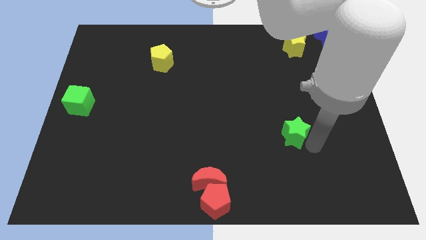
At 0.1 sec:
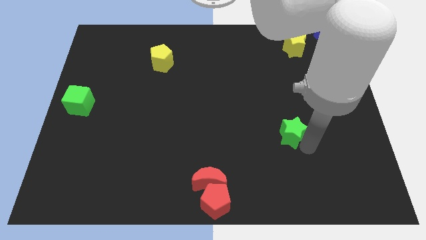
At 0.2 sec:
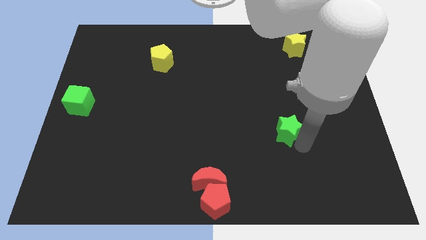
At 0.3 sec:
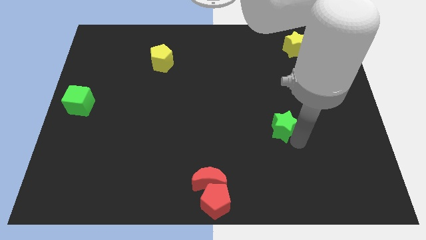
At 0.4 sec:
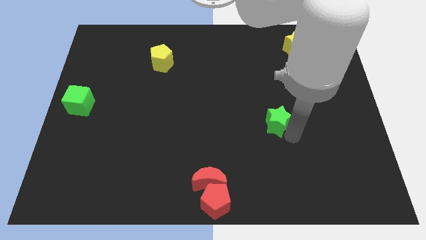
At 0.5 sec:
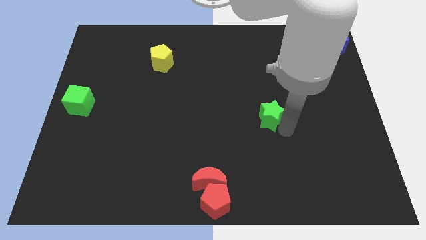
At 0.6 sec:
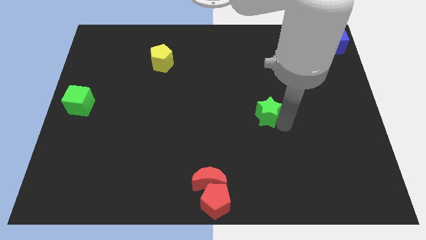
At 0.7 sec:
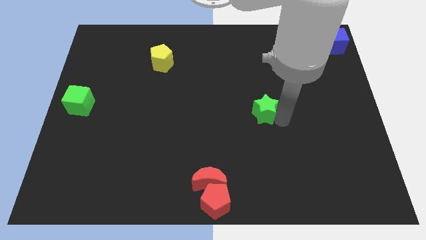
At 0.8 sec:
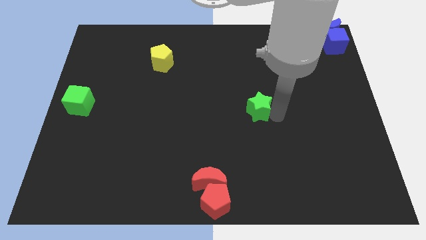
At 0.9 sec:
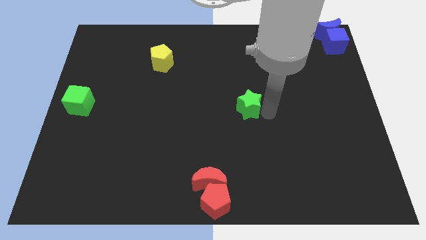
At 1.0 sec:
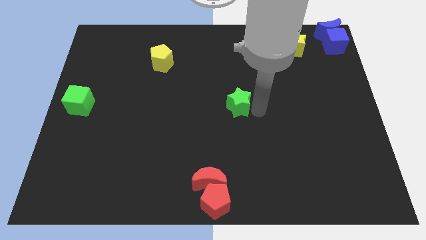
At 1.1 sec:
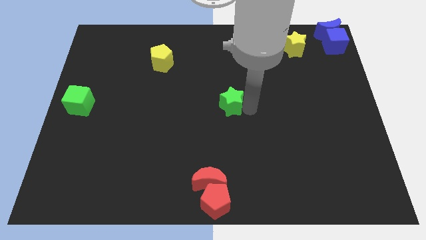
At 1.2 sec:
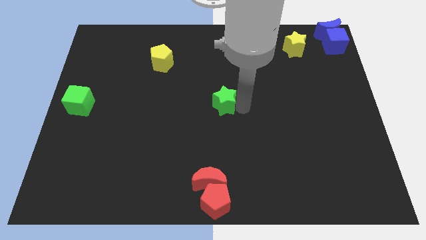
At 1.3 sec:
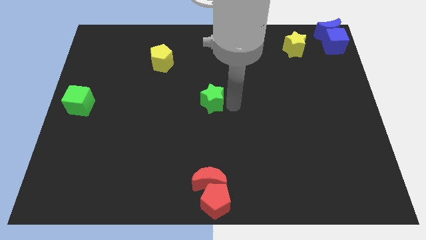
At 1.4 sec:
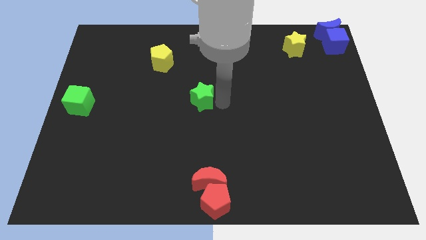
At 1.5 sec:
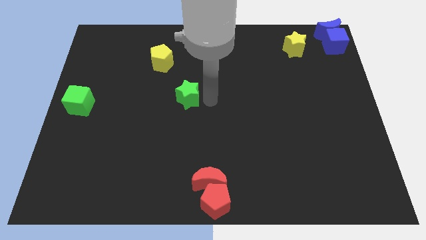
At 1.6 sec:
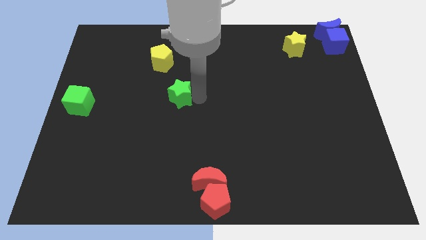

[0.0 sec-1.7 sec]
move the green cube to the center of the board

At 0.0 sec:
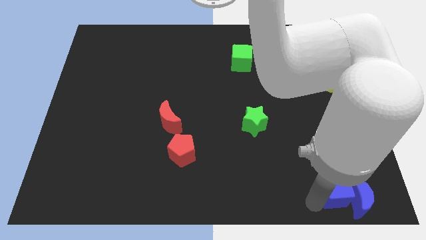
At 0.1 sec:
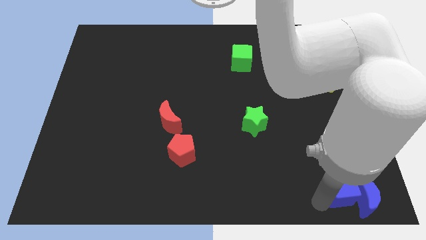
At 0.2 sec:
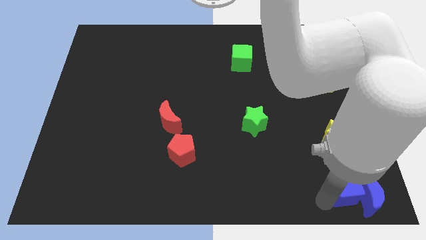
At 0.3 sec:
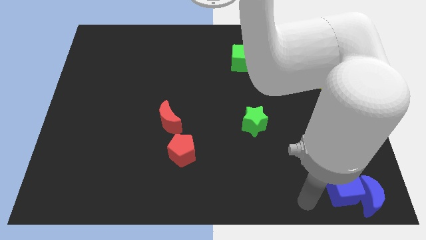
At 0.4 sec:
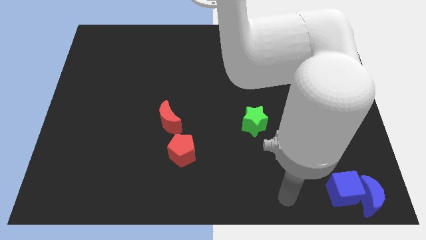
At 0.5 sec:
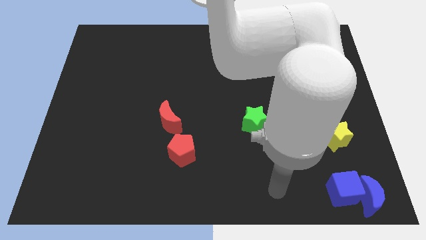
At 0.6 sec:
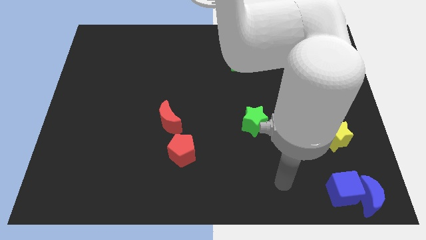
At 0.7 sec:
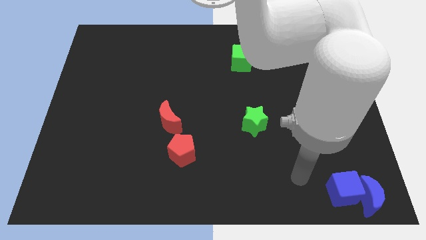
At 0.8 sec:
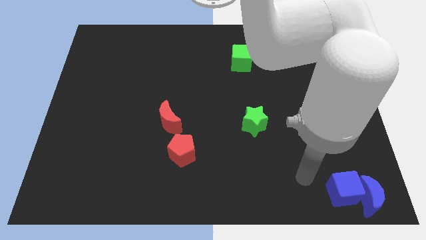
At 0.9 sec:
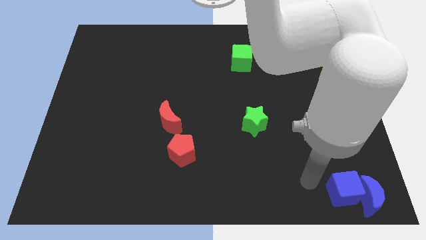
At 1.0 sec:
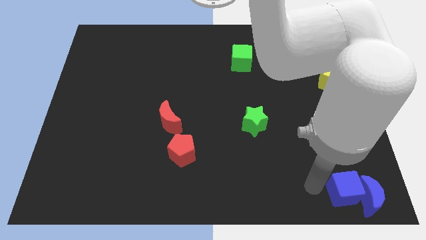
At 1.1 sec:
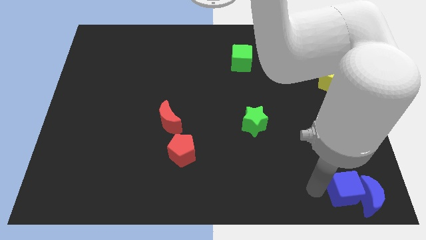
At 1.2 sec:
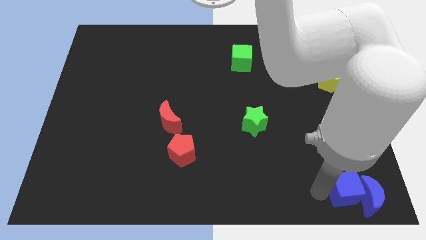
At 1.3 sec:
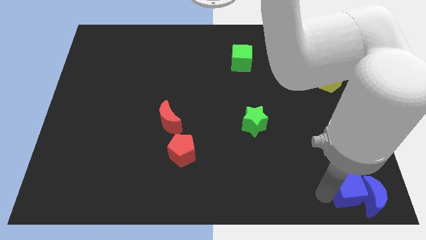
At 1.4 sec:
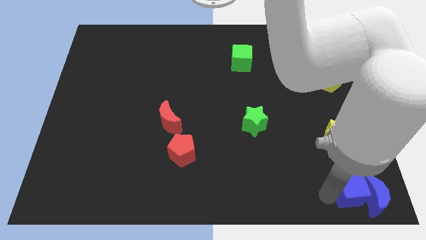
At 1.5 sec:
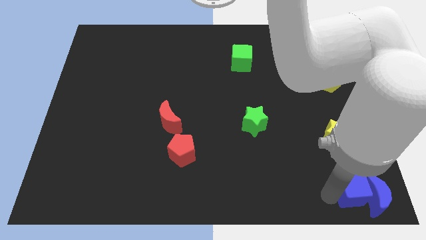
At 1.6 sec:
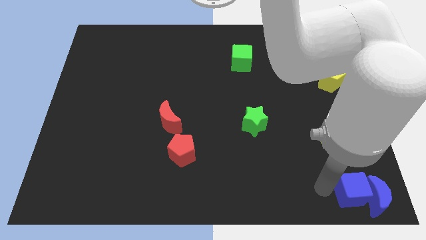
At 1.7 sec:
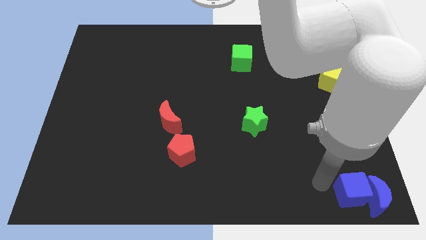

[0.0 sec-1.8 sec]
push the blue blocks to the bottom right corner

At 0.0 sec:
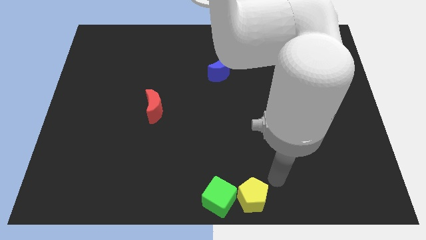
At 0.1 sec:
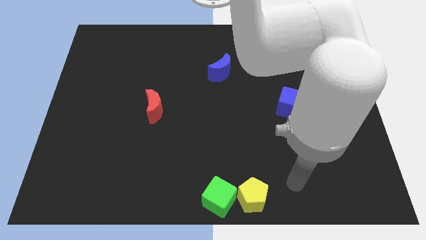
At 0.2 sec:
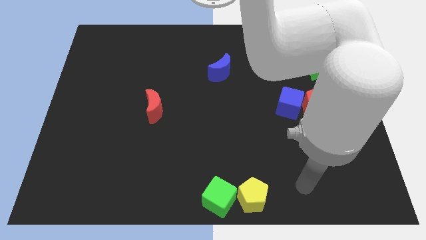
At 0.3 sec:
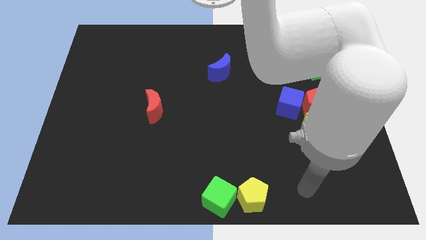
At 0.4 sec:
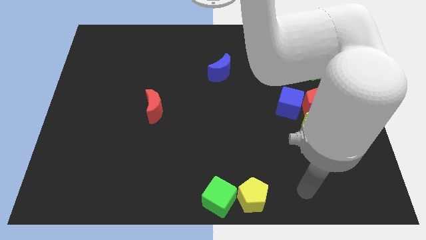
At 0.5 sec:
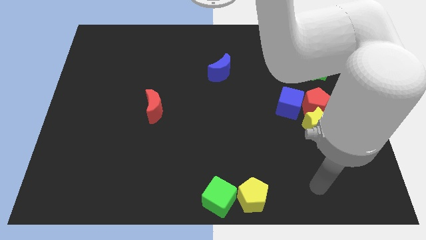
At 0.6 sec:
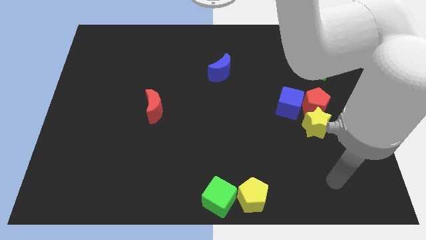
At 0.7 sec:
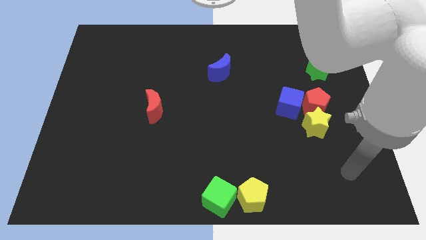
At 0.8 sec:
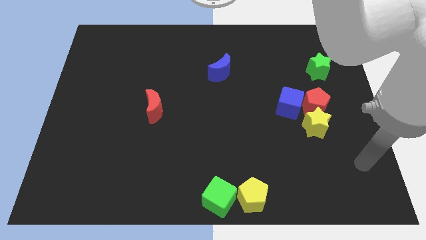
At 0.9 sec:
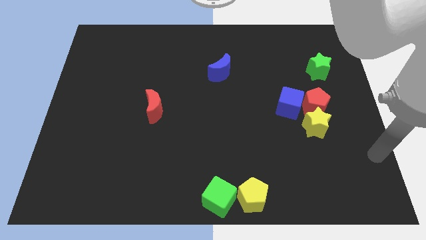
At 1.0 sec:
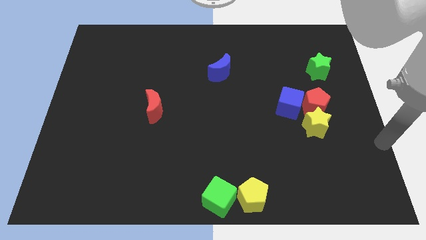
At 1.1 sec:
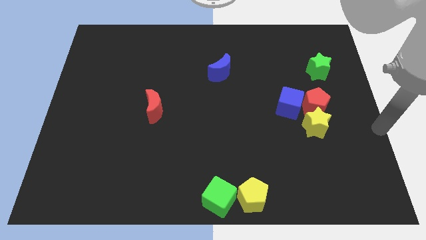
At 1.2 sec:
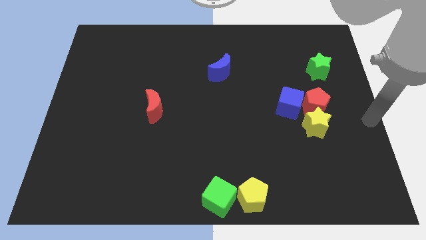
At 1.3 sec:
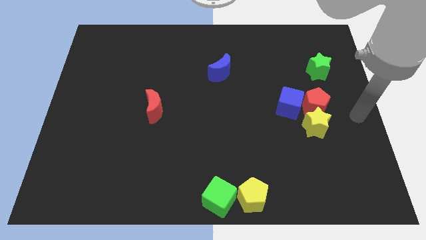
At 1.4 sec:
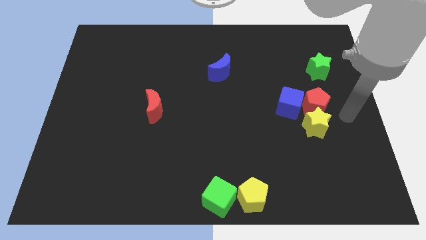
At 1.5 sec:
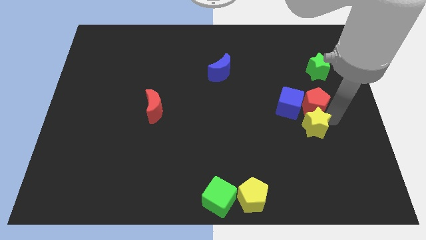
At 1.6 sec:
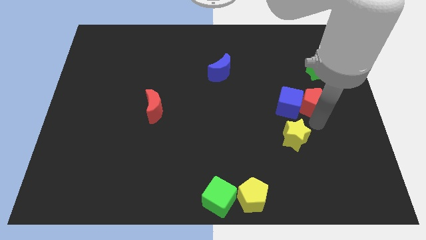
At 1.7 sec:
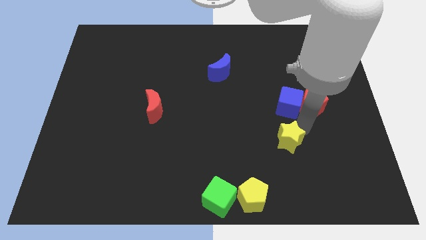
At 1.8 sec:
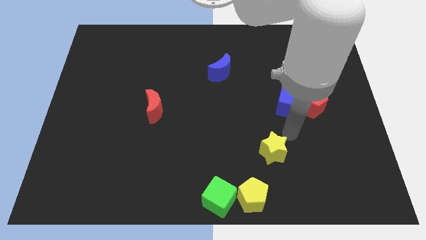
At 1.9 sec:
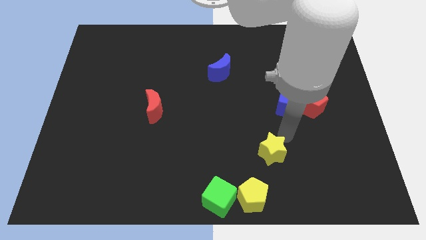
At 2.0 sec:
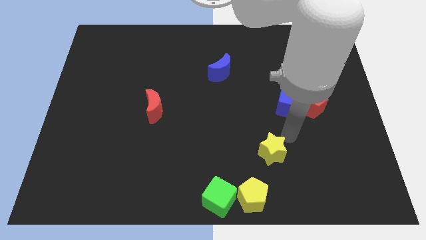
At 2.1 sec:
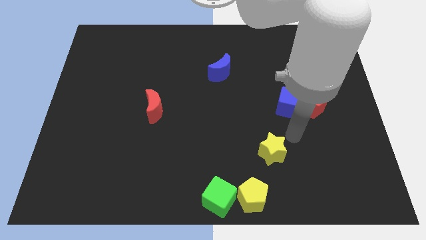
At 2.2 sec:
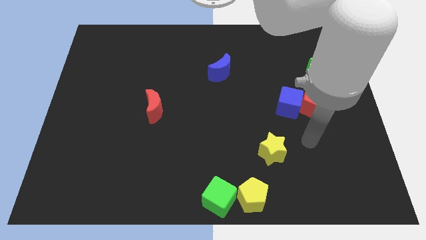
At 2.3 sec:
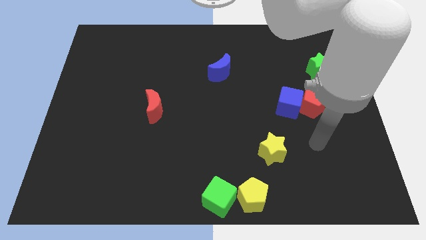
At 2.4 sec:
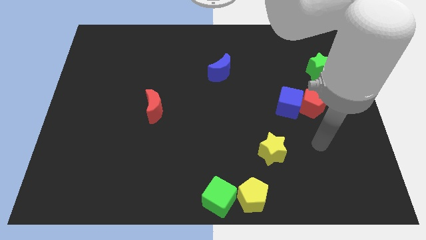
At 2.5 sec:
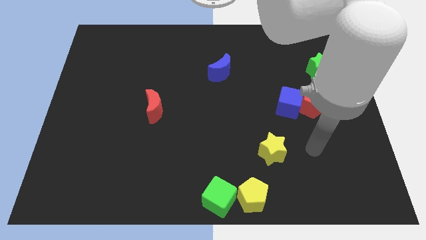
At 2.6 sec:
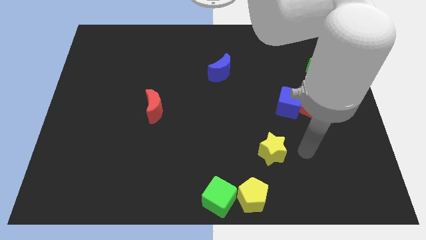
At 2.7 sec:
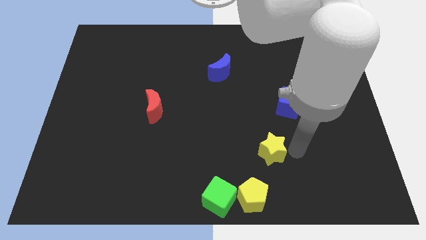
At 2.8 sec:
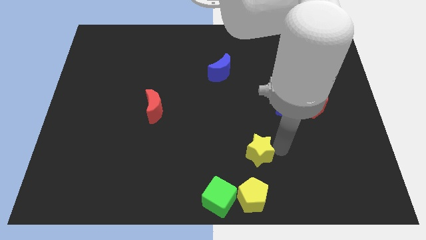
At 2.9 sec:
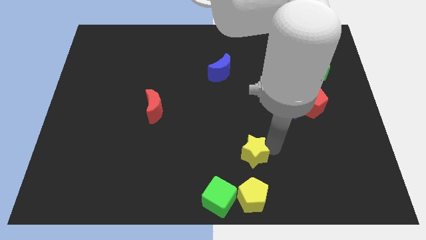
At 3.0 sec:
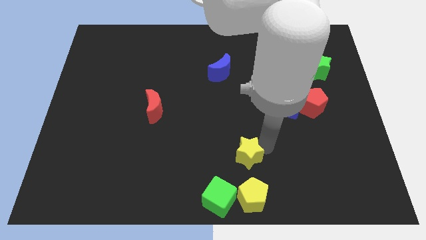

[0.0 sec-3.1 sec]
place the yellow star above the yellow pentagon

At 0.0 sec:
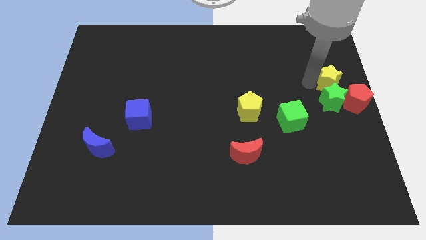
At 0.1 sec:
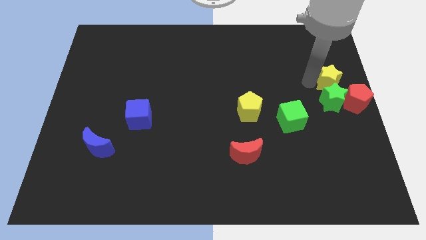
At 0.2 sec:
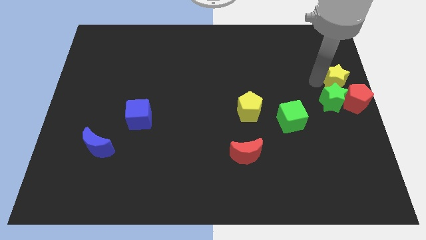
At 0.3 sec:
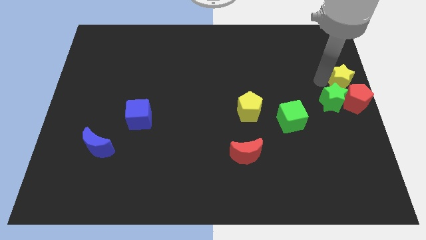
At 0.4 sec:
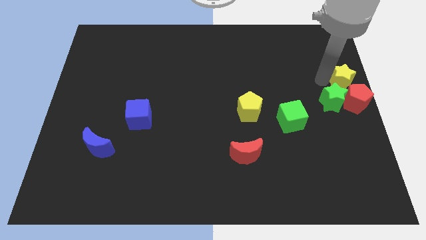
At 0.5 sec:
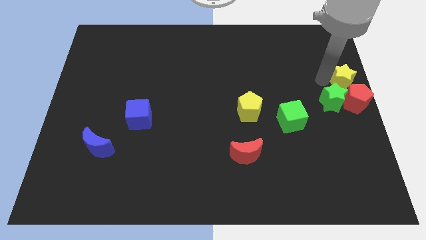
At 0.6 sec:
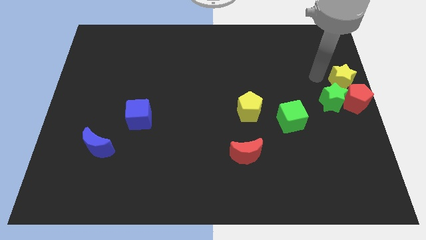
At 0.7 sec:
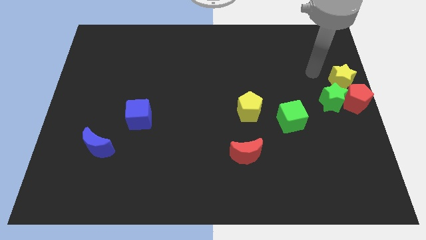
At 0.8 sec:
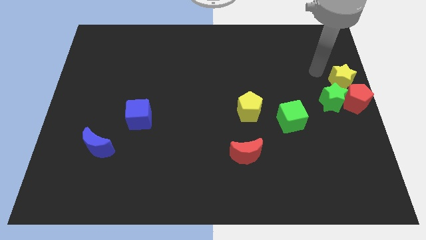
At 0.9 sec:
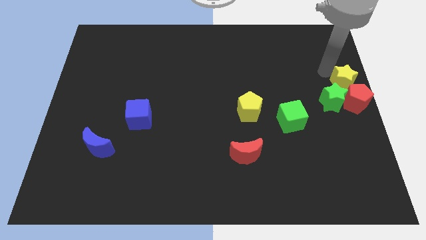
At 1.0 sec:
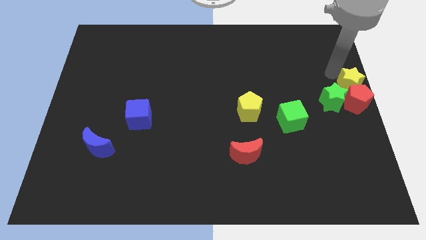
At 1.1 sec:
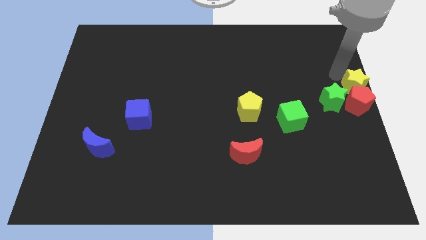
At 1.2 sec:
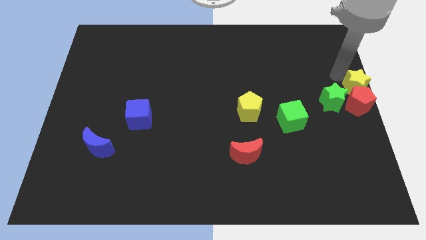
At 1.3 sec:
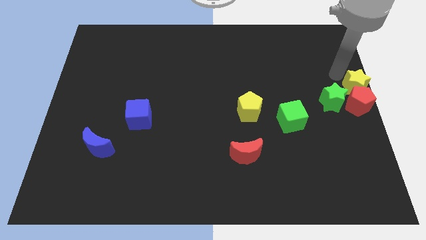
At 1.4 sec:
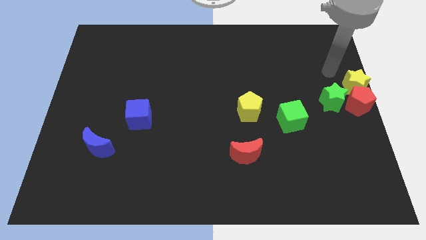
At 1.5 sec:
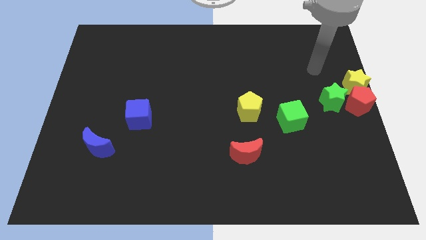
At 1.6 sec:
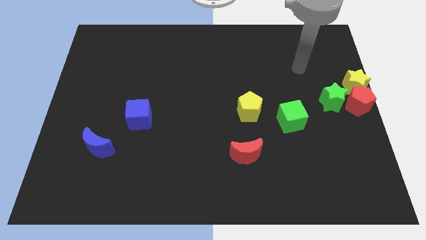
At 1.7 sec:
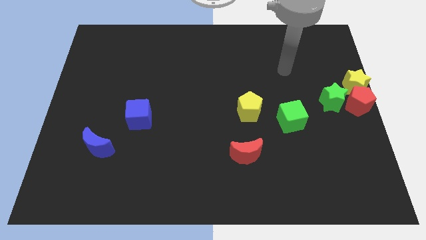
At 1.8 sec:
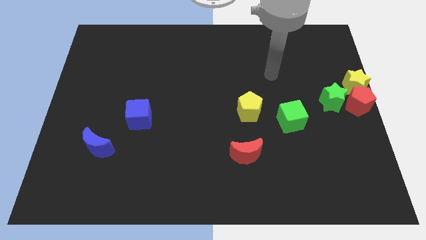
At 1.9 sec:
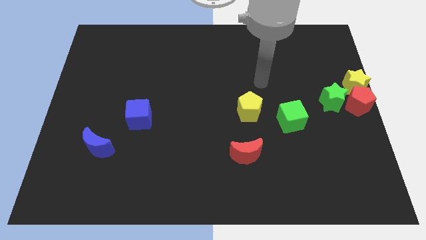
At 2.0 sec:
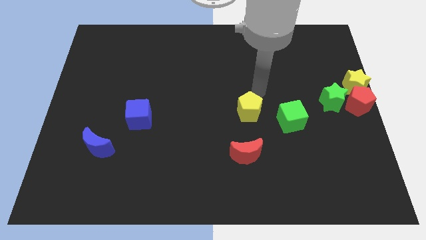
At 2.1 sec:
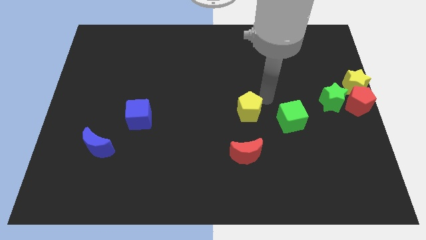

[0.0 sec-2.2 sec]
slide the yellow star towards the upper side of the red pentagon
